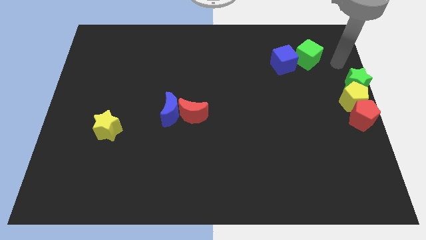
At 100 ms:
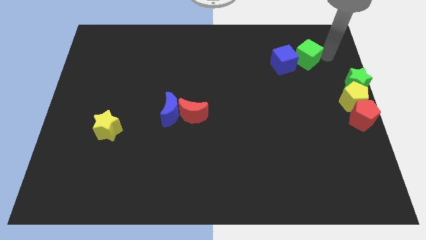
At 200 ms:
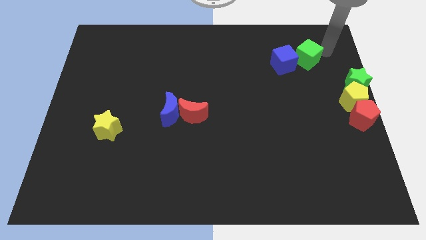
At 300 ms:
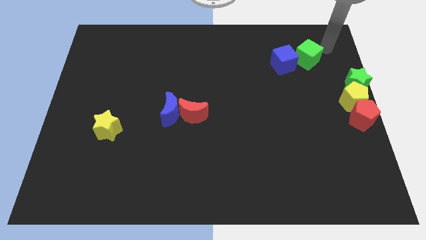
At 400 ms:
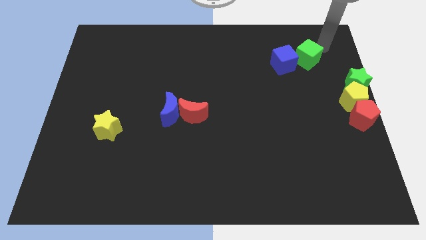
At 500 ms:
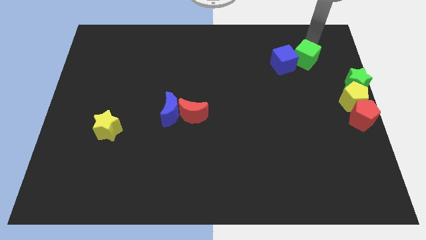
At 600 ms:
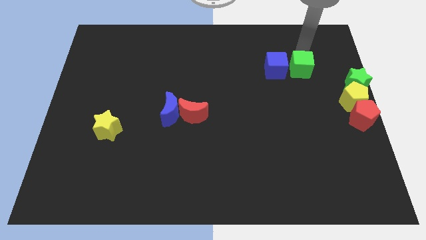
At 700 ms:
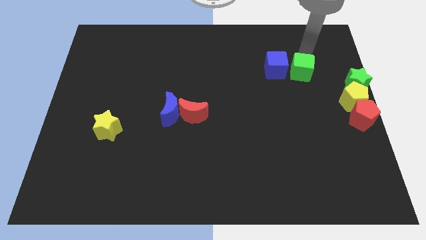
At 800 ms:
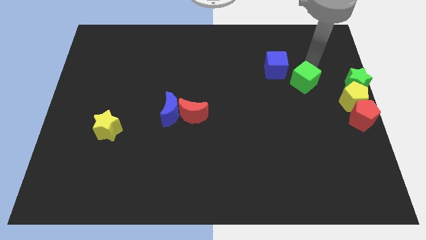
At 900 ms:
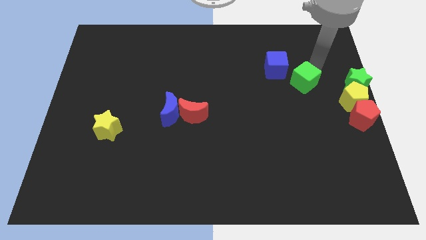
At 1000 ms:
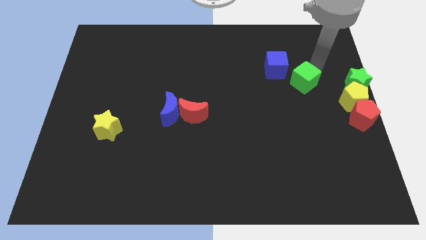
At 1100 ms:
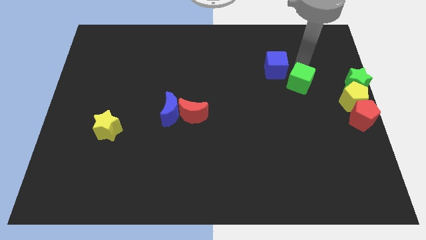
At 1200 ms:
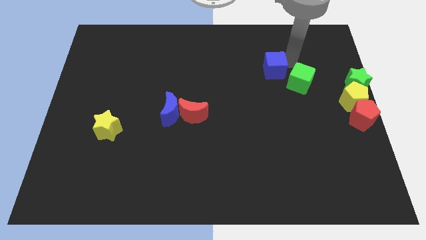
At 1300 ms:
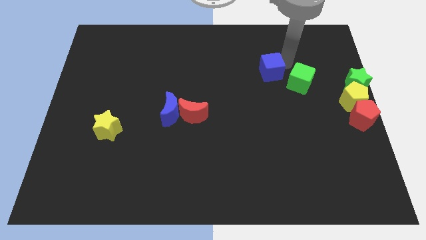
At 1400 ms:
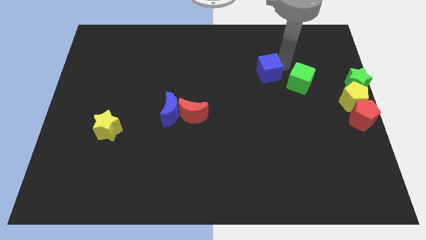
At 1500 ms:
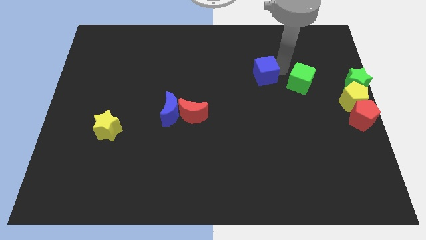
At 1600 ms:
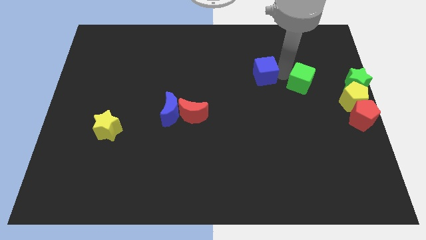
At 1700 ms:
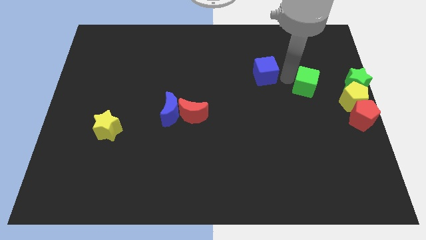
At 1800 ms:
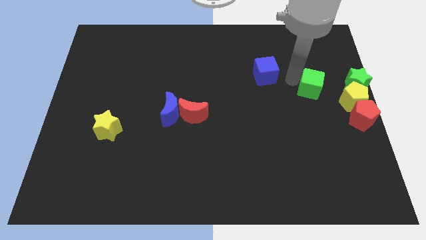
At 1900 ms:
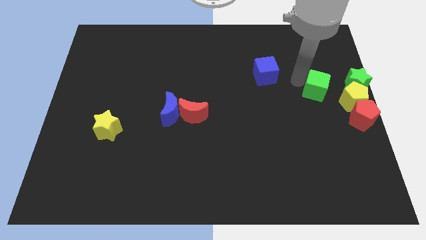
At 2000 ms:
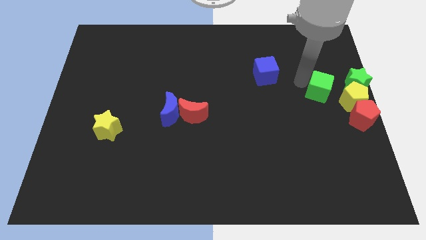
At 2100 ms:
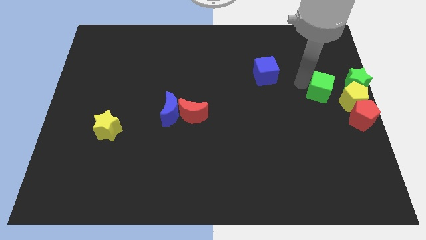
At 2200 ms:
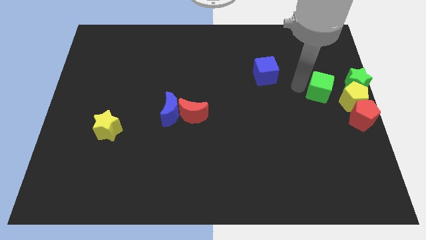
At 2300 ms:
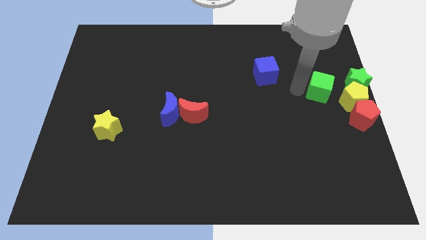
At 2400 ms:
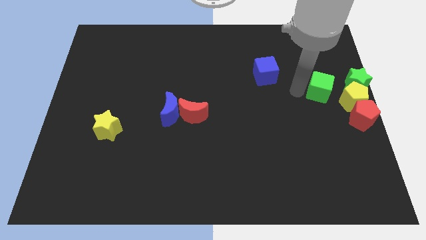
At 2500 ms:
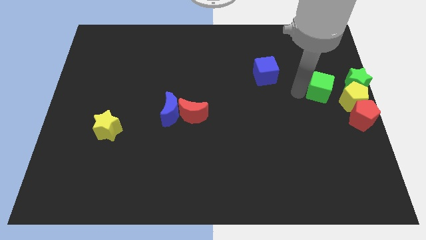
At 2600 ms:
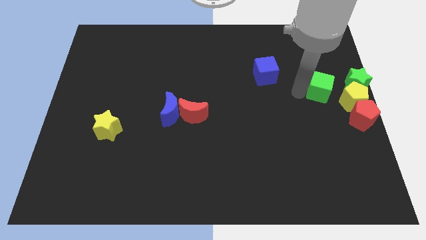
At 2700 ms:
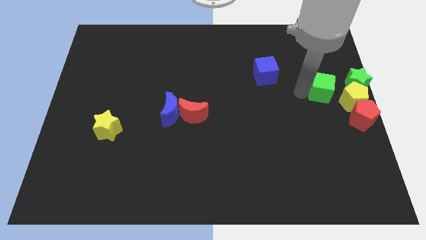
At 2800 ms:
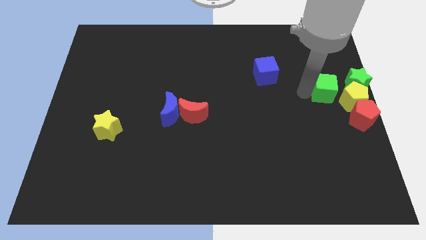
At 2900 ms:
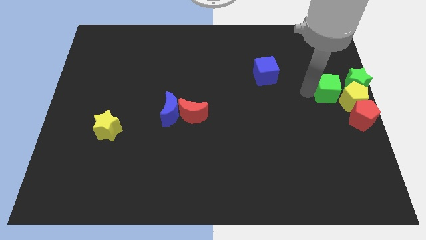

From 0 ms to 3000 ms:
separate the cubes

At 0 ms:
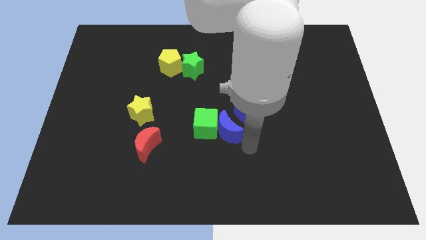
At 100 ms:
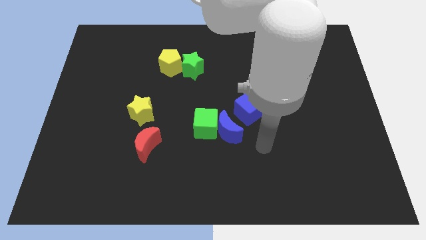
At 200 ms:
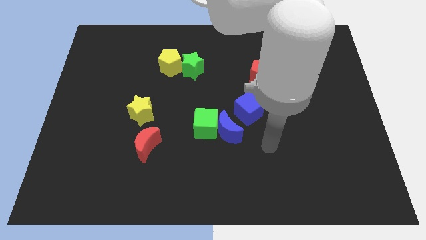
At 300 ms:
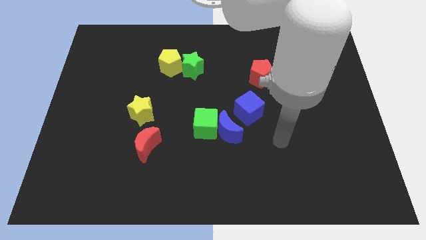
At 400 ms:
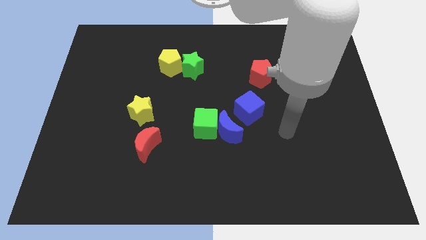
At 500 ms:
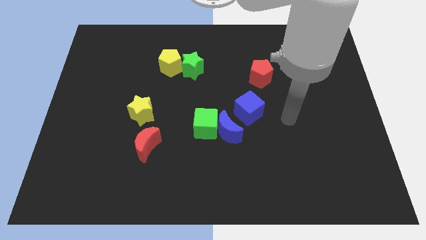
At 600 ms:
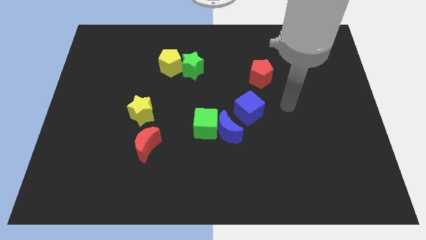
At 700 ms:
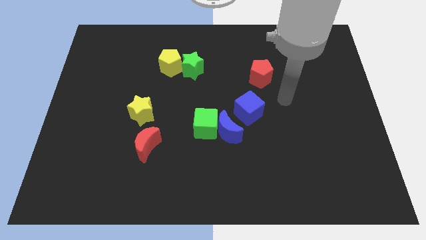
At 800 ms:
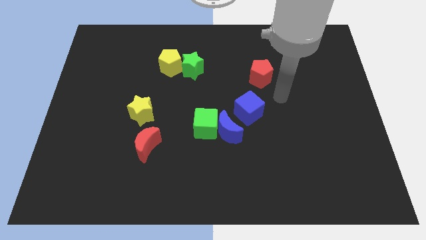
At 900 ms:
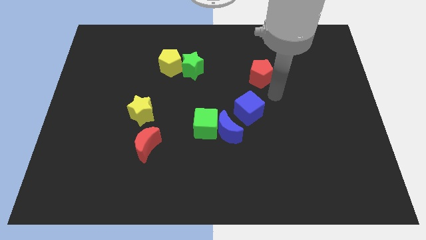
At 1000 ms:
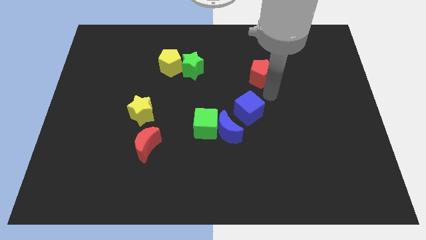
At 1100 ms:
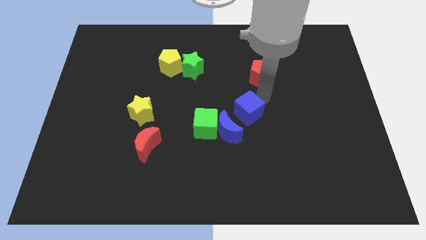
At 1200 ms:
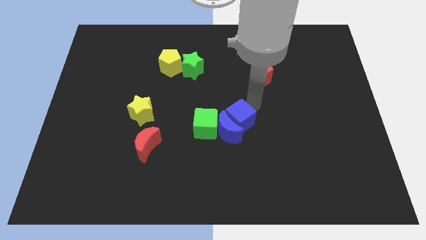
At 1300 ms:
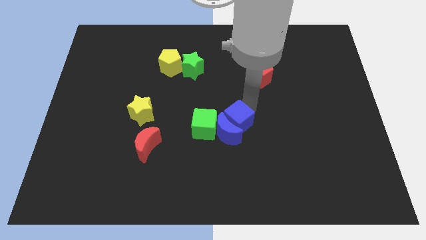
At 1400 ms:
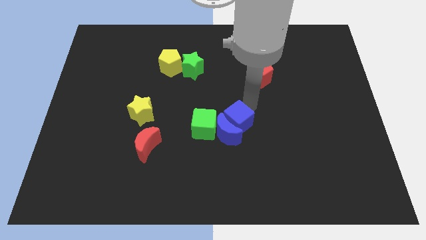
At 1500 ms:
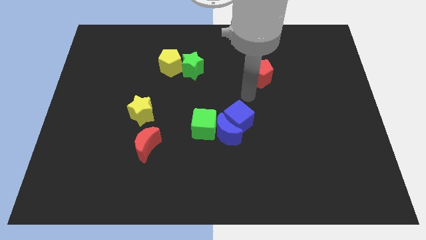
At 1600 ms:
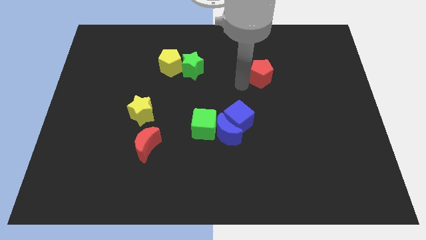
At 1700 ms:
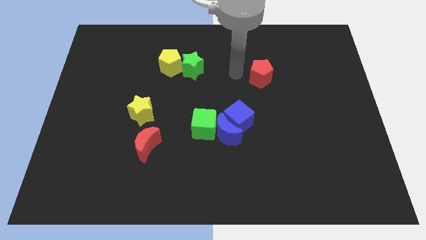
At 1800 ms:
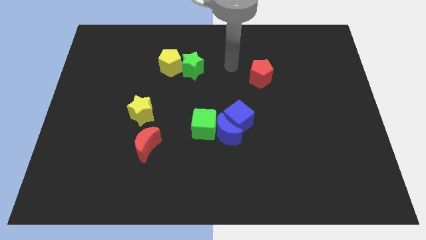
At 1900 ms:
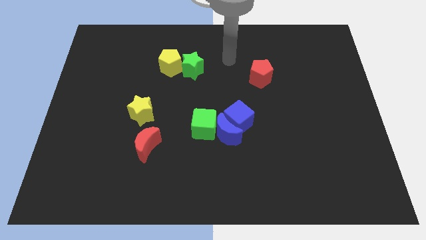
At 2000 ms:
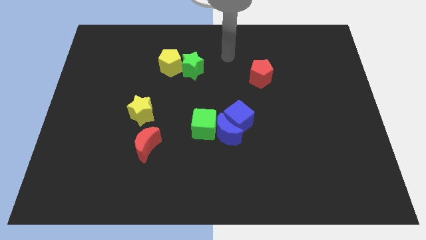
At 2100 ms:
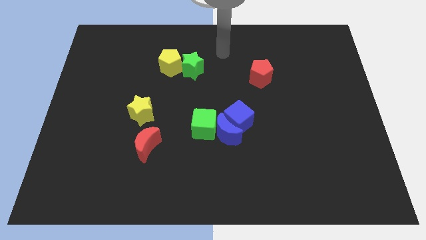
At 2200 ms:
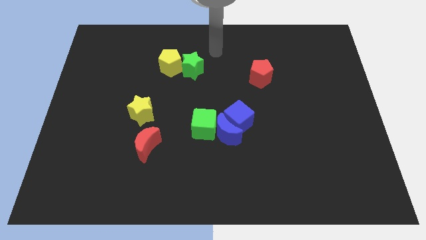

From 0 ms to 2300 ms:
push the blue cube into the blue crescent

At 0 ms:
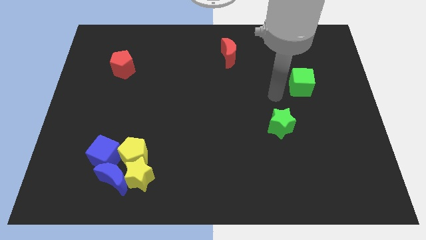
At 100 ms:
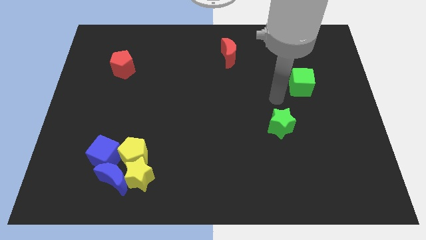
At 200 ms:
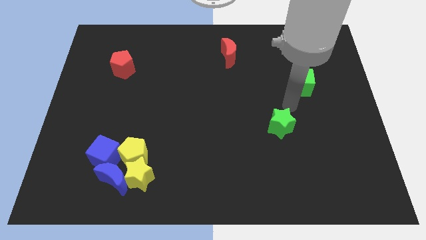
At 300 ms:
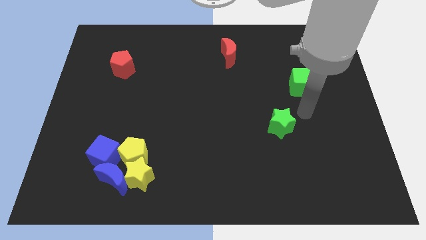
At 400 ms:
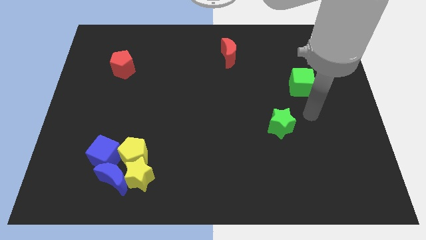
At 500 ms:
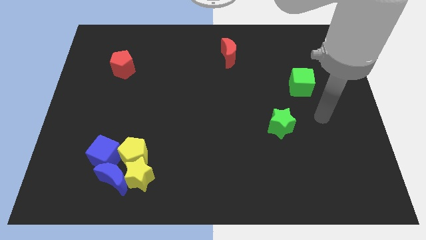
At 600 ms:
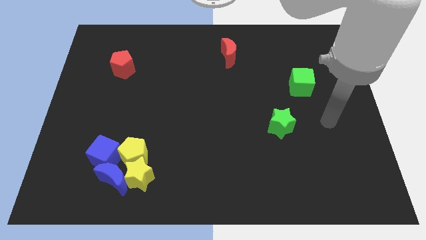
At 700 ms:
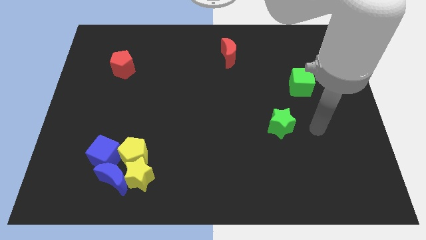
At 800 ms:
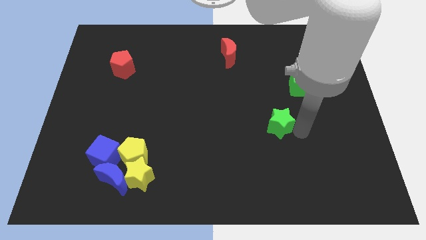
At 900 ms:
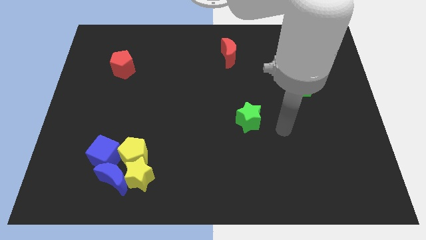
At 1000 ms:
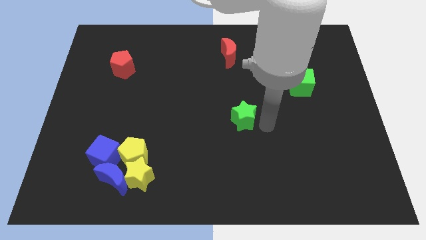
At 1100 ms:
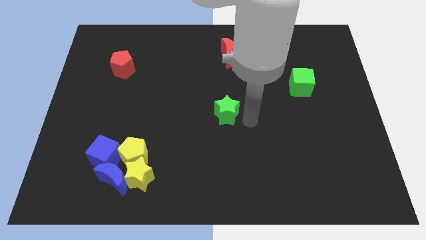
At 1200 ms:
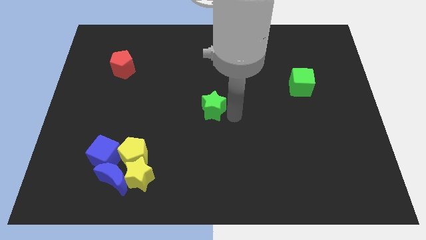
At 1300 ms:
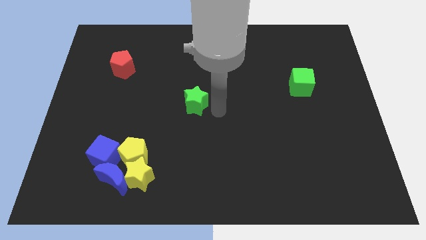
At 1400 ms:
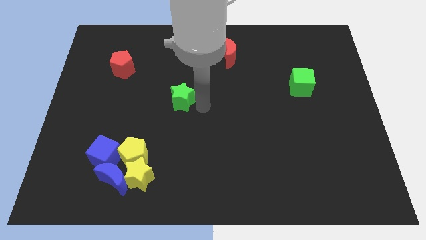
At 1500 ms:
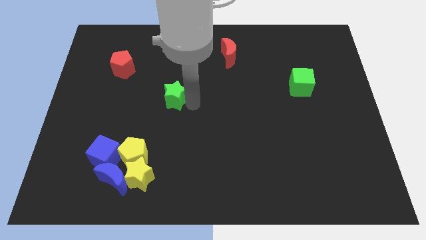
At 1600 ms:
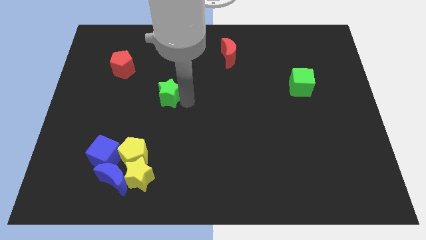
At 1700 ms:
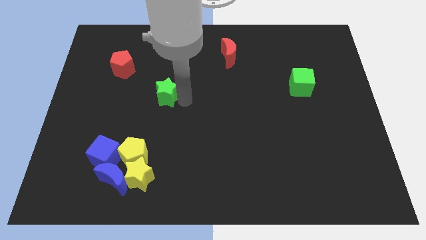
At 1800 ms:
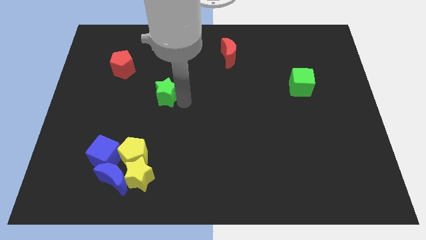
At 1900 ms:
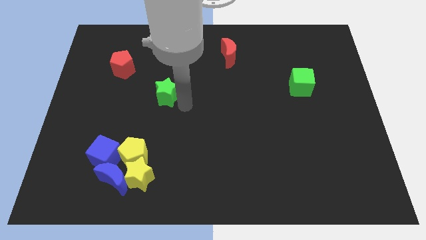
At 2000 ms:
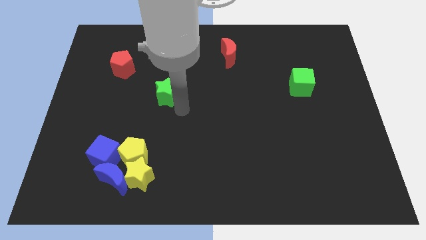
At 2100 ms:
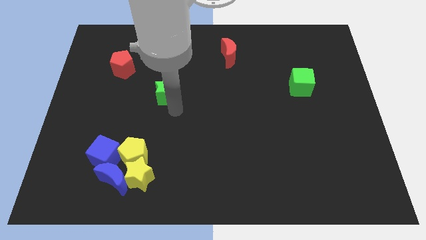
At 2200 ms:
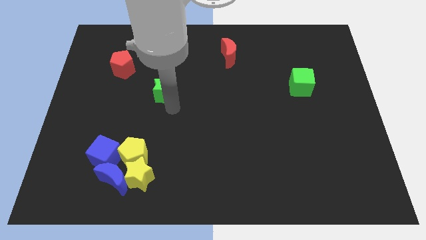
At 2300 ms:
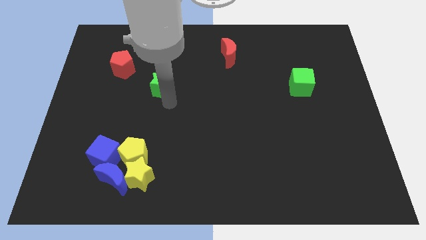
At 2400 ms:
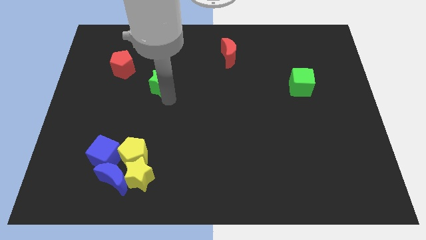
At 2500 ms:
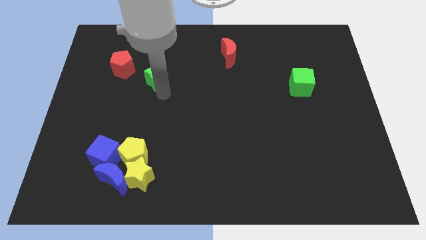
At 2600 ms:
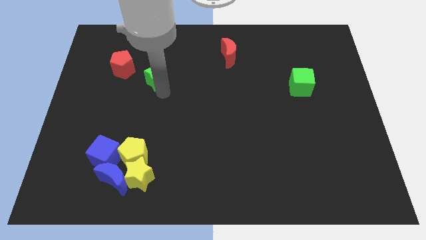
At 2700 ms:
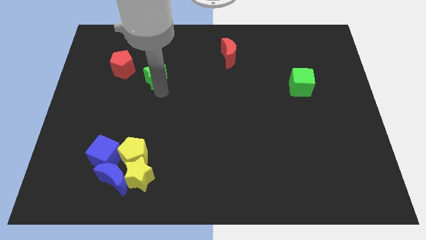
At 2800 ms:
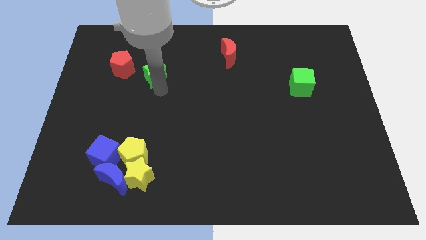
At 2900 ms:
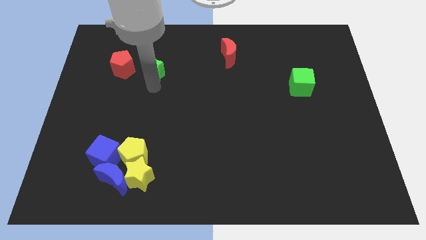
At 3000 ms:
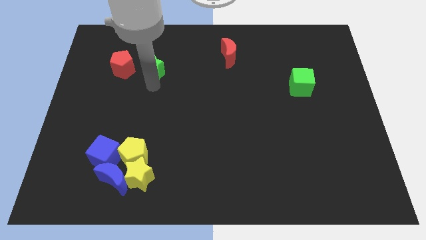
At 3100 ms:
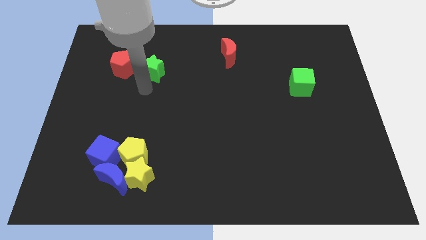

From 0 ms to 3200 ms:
push the green star to the right of the red pentagon

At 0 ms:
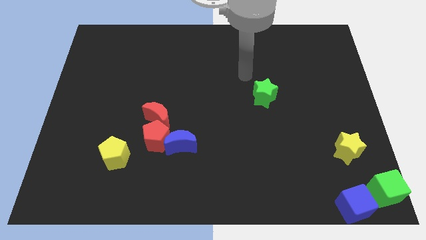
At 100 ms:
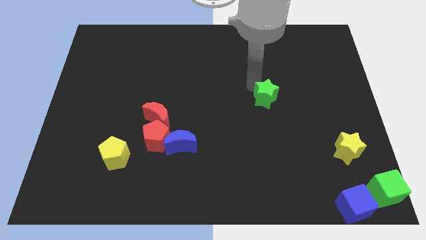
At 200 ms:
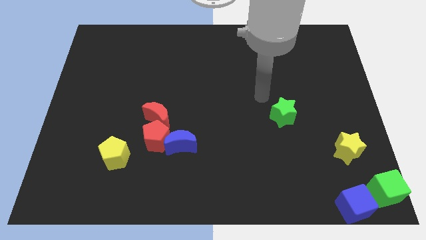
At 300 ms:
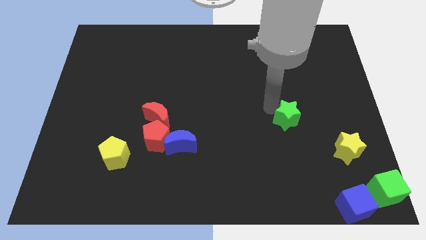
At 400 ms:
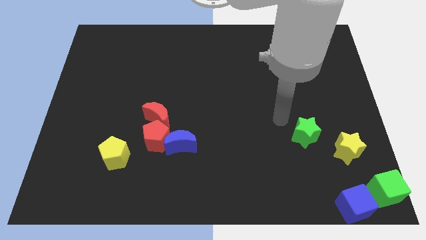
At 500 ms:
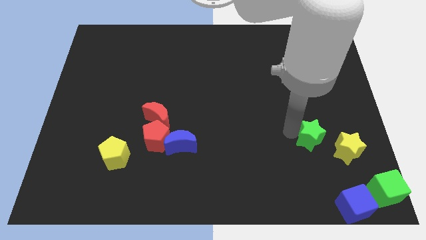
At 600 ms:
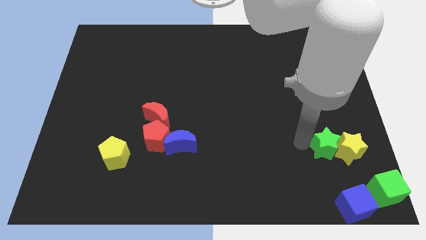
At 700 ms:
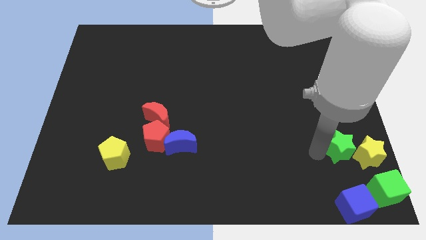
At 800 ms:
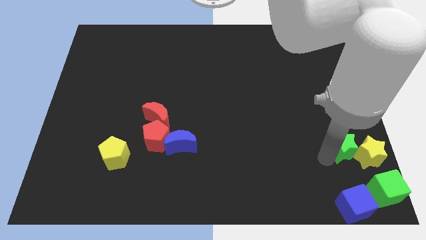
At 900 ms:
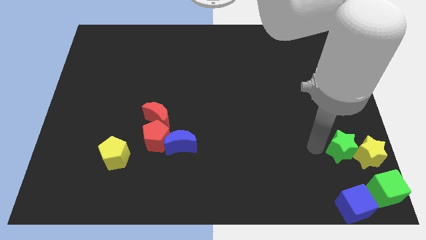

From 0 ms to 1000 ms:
push the green star into the yellow star
